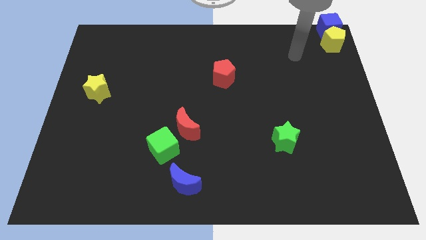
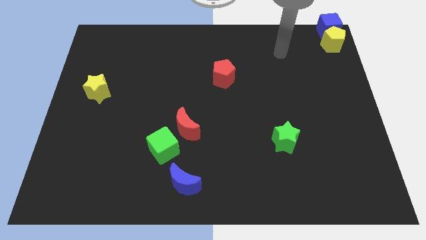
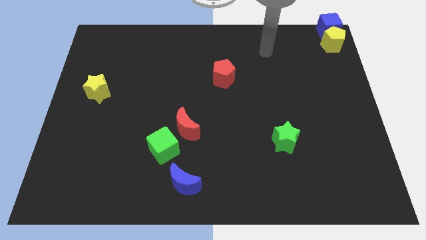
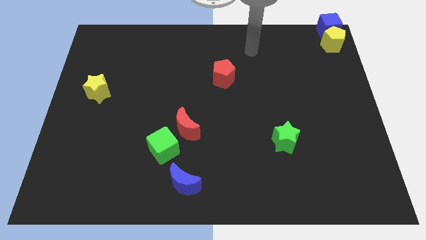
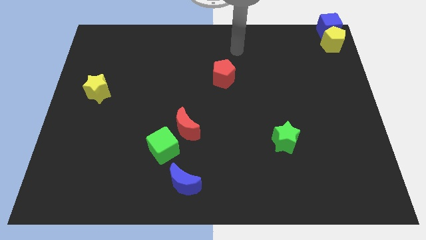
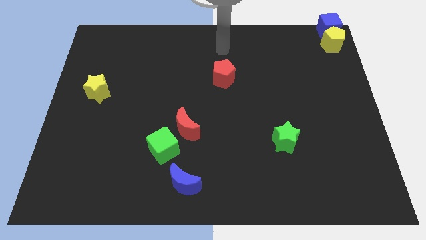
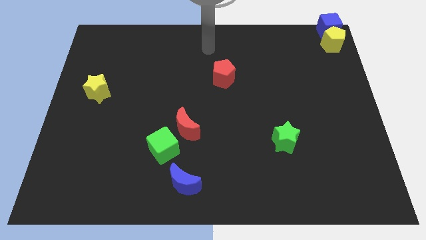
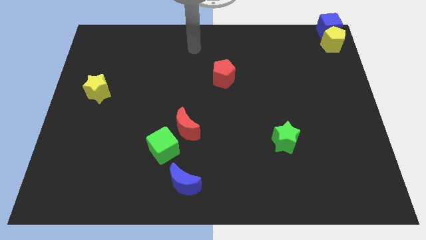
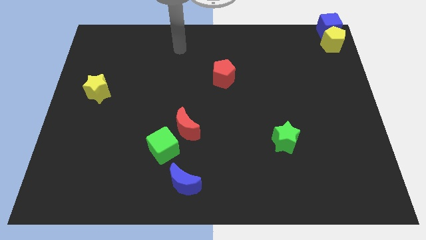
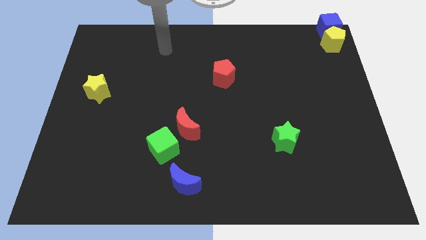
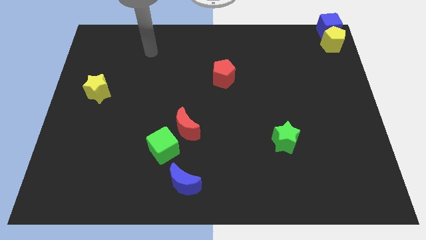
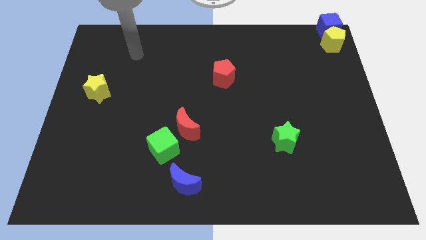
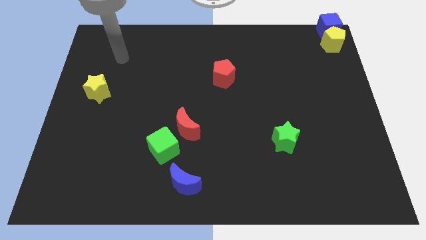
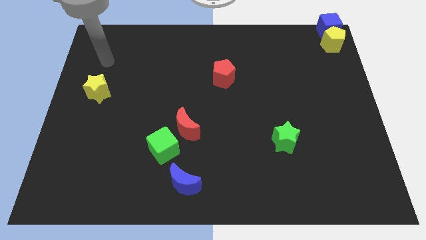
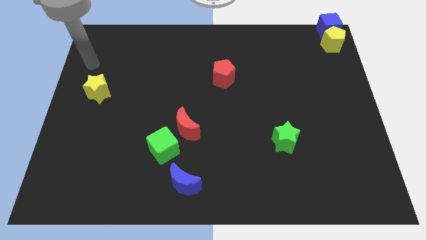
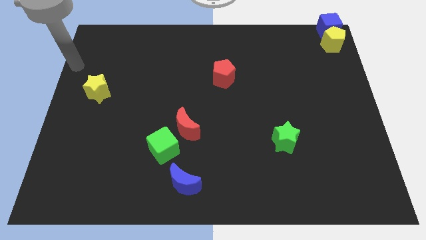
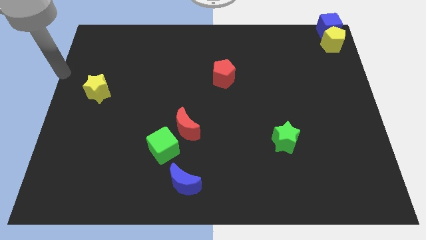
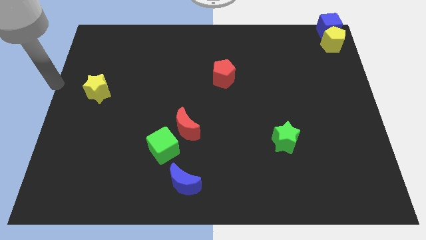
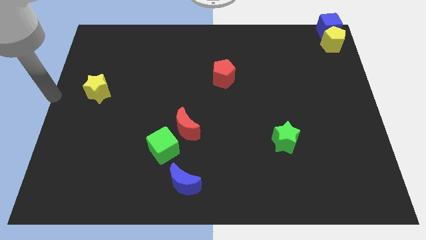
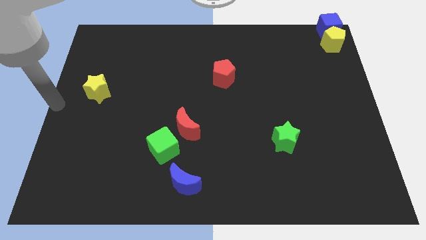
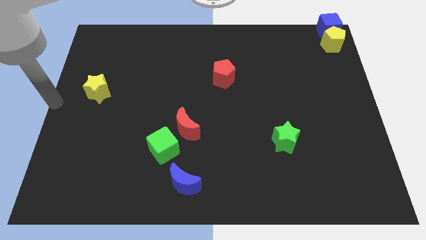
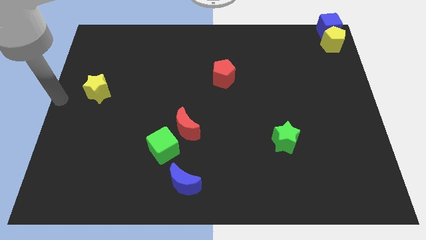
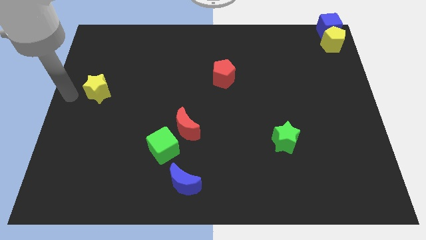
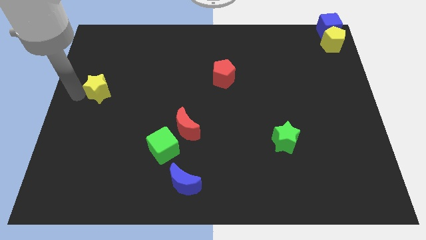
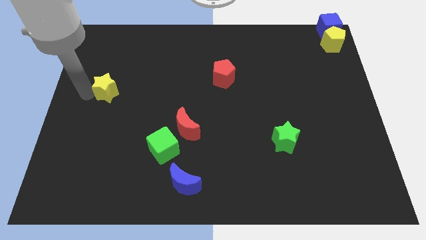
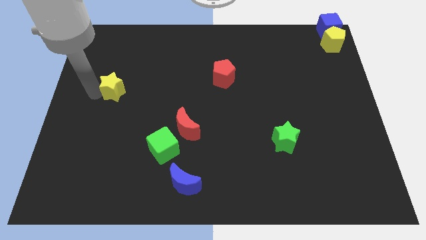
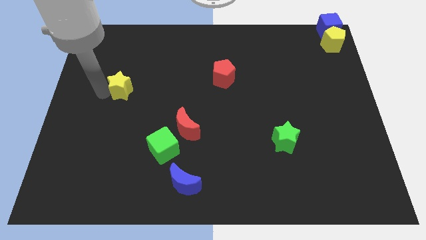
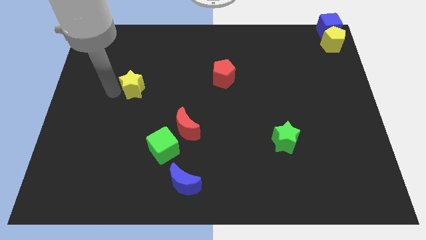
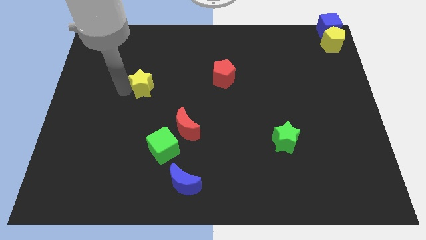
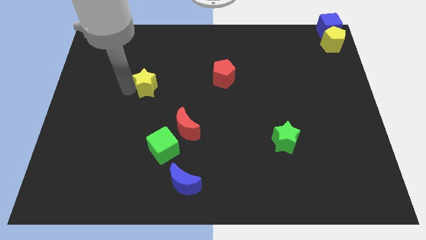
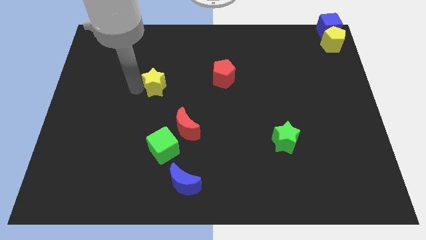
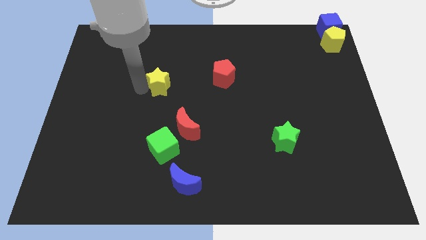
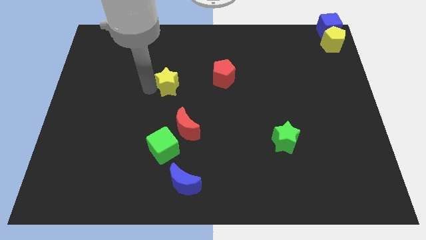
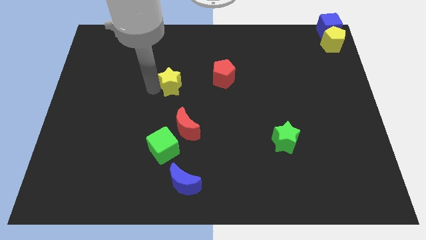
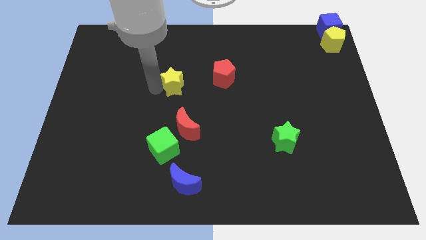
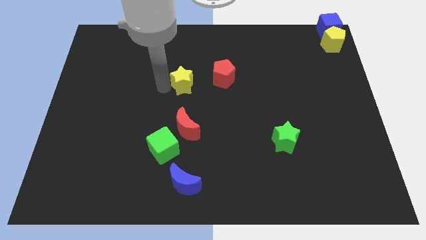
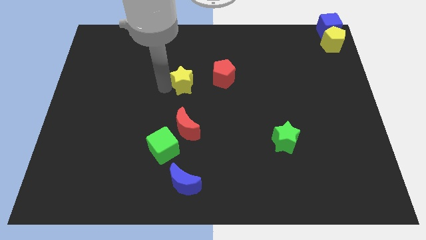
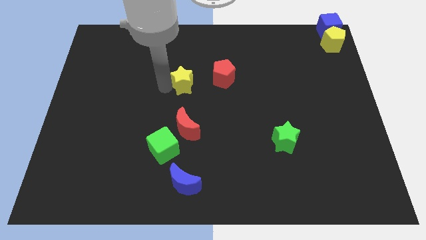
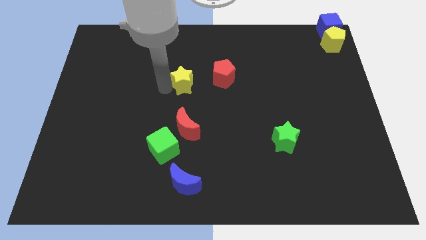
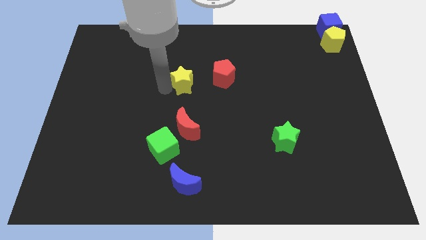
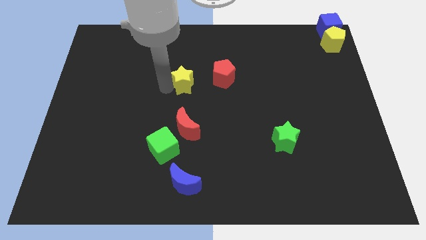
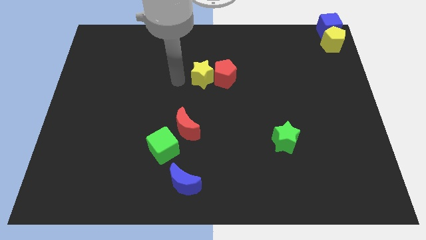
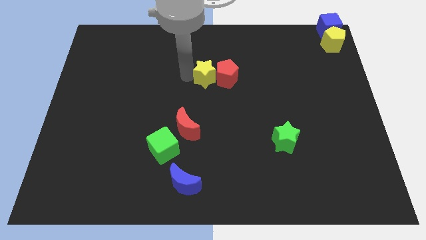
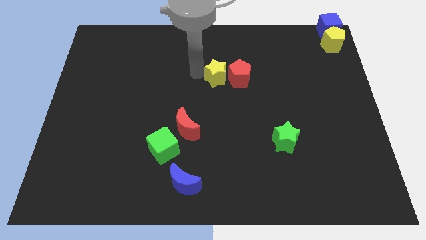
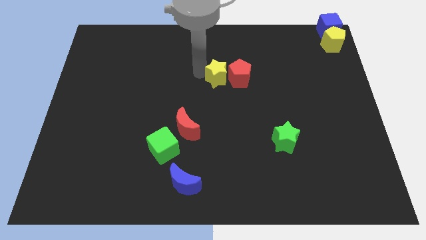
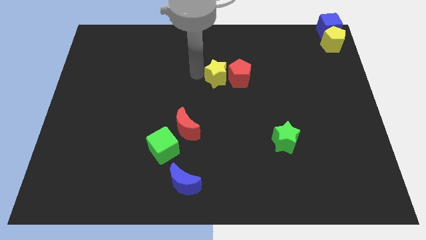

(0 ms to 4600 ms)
push the yellow star into the red pentagon

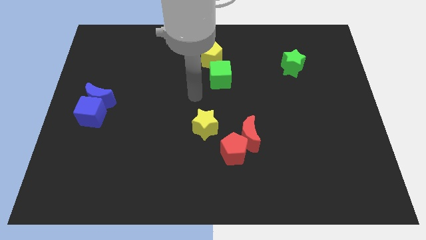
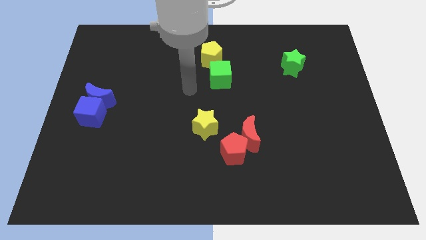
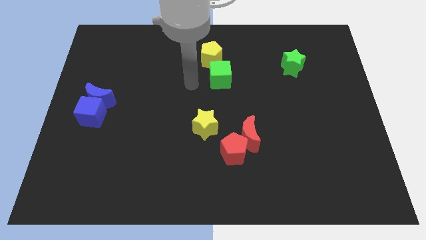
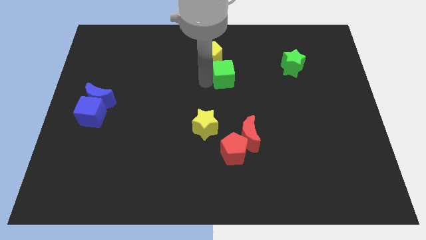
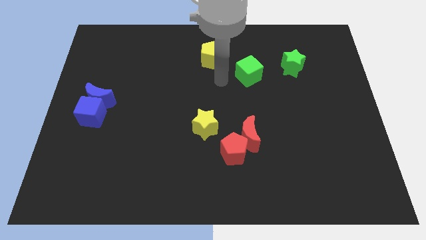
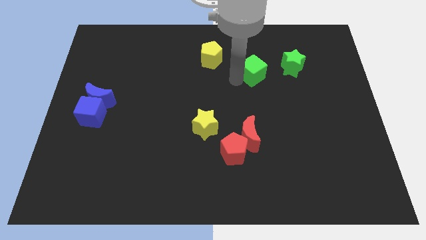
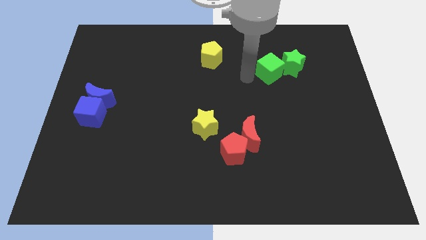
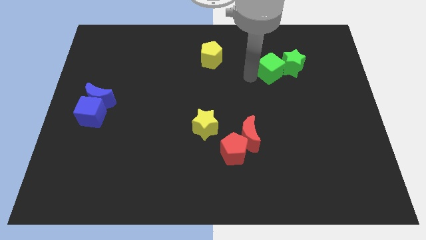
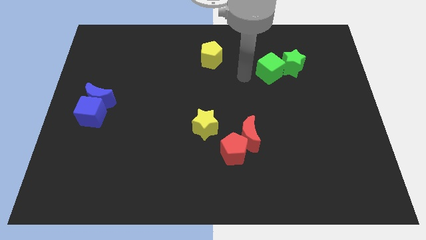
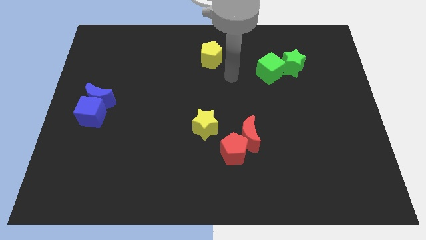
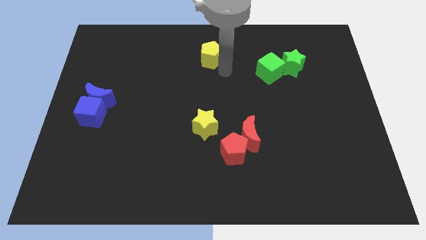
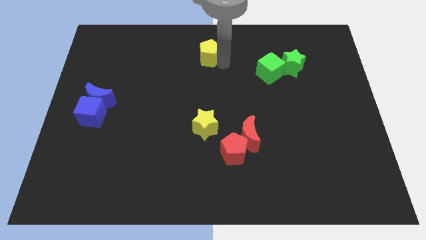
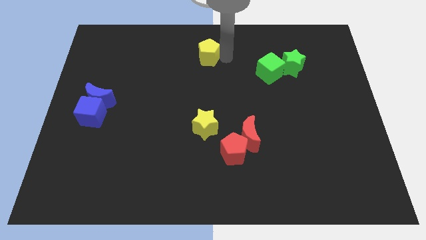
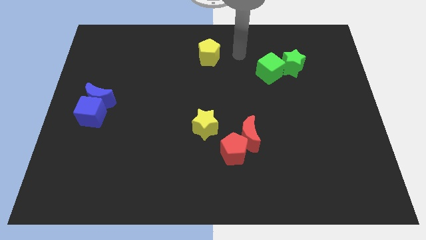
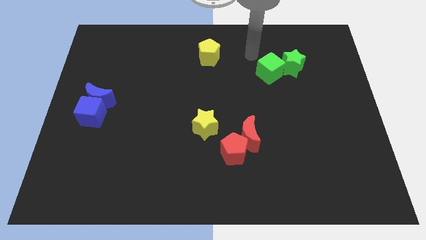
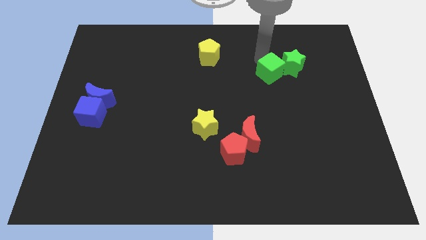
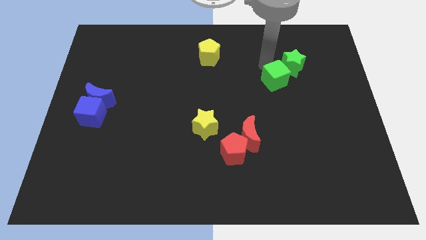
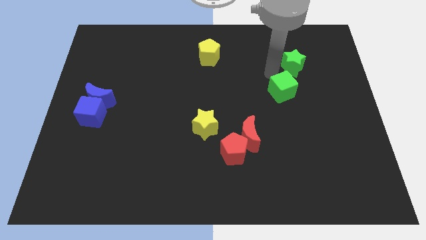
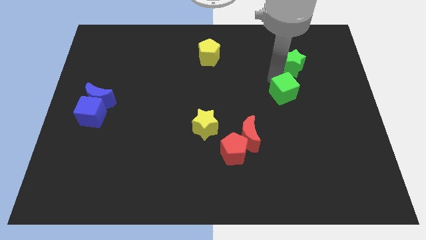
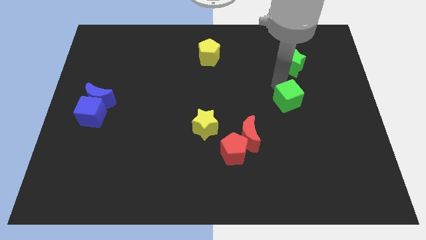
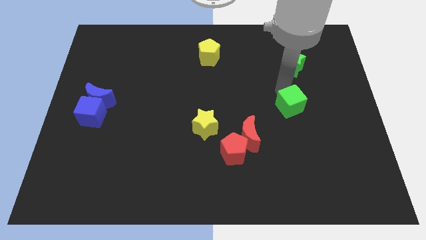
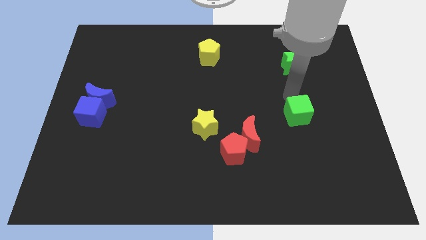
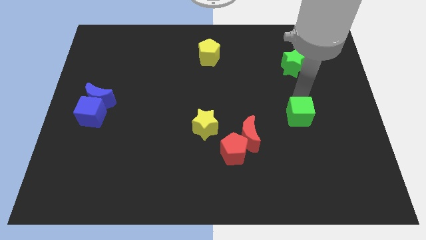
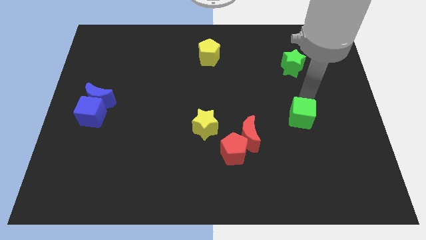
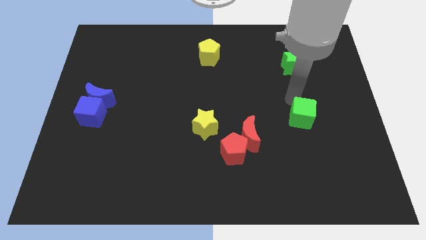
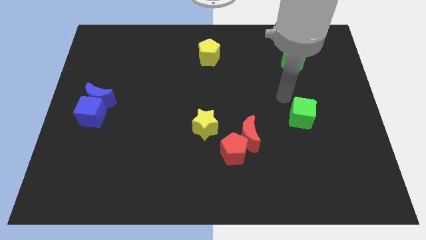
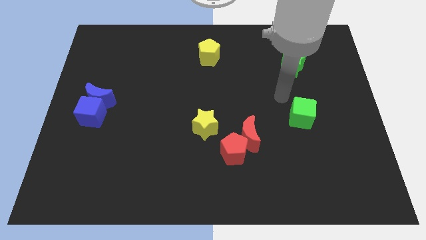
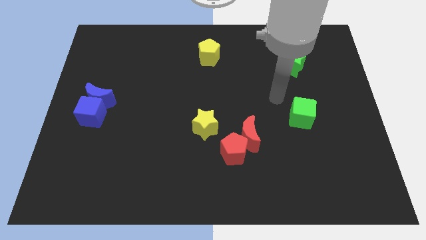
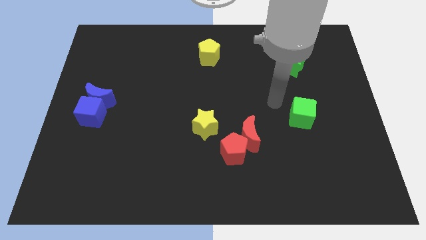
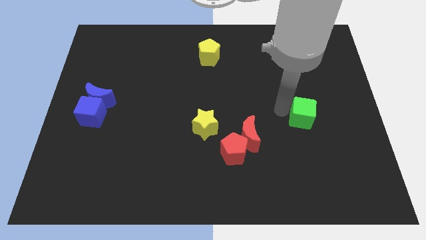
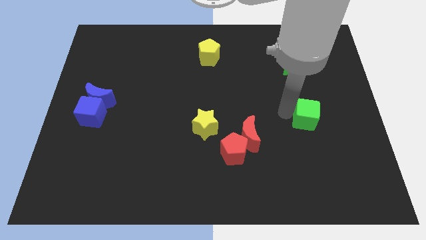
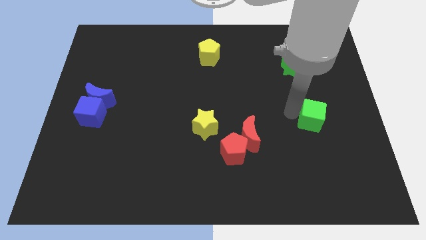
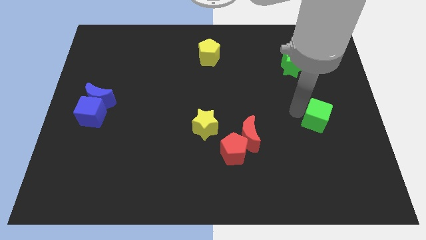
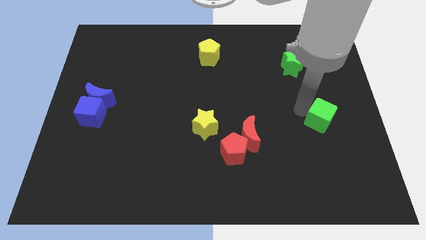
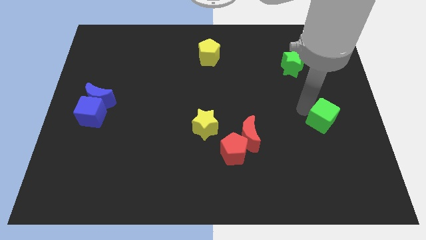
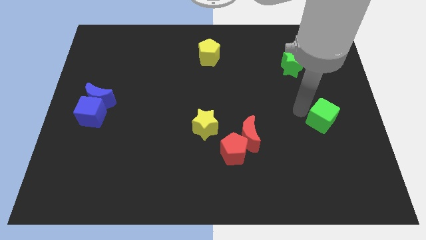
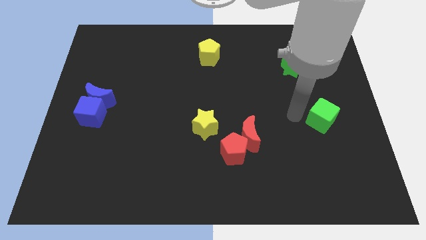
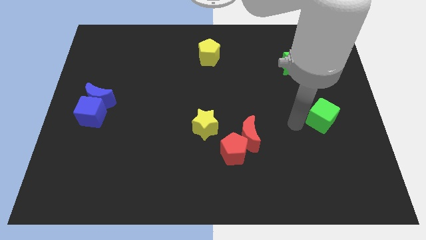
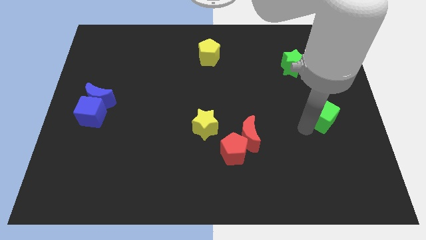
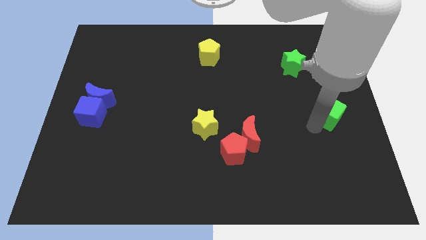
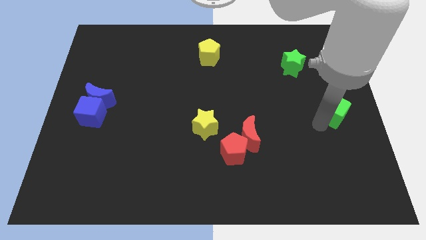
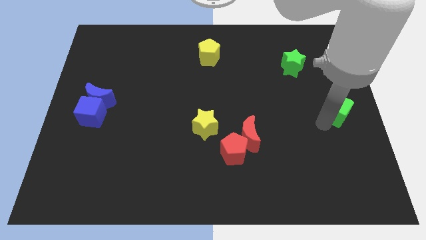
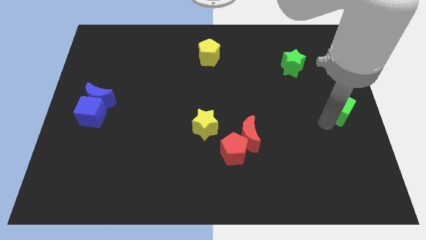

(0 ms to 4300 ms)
push the green cube to the right side of the board
